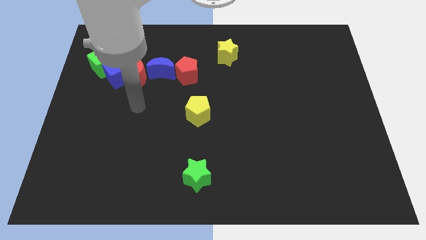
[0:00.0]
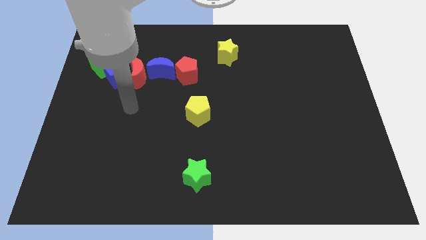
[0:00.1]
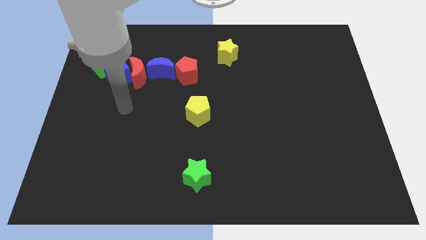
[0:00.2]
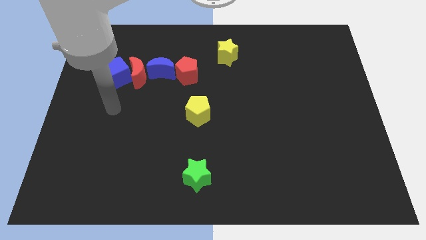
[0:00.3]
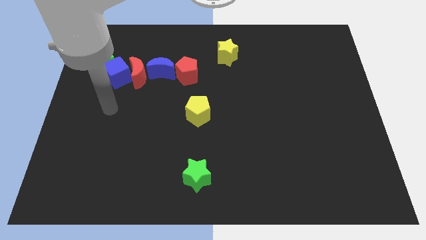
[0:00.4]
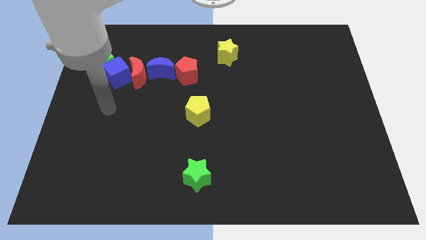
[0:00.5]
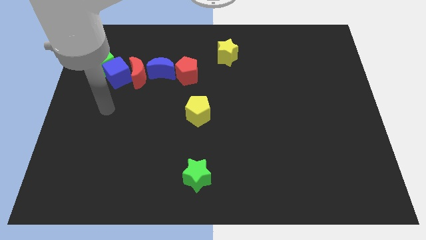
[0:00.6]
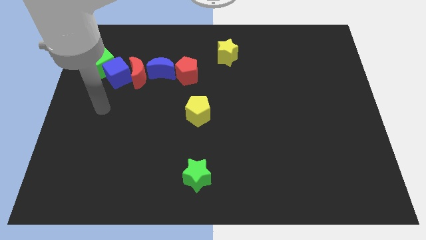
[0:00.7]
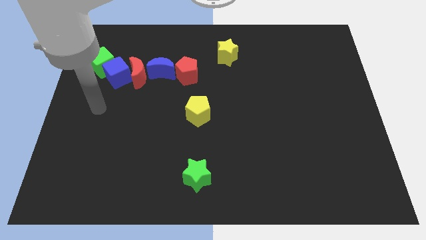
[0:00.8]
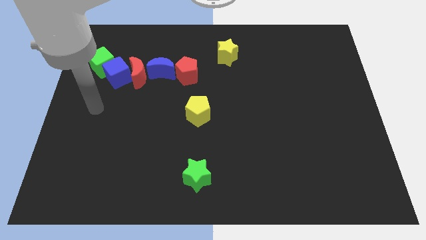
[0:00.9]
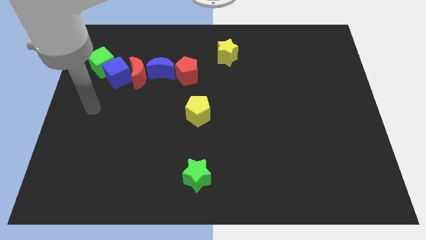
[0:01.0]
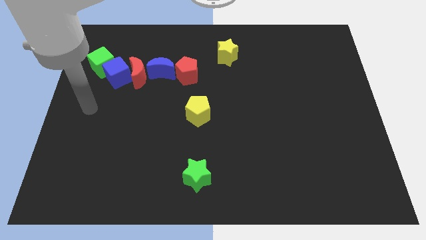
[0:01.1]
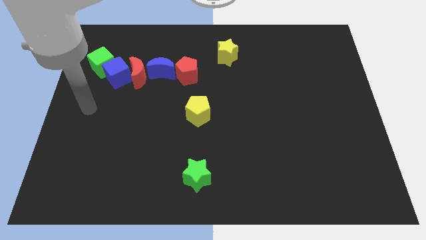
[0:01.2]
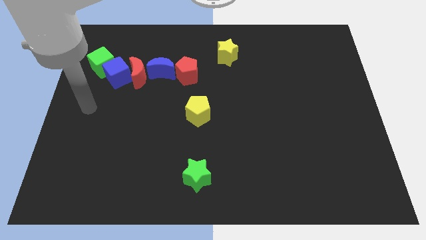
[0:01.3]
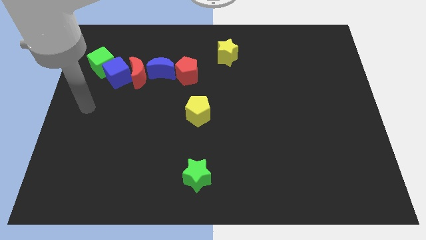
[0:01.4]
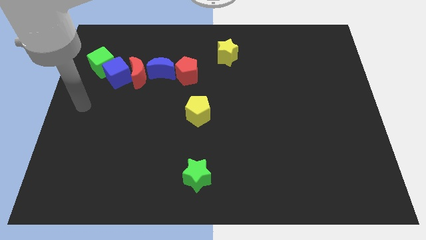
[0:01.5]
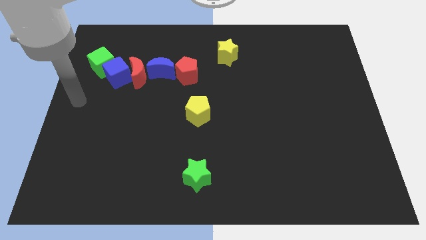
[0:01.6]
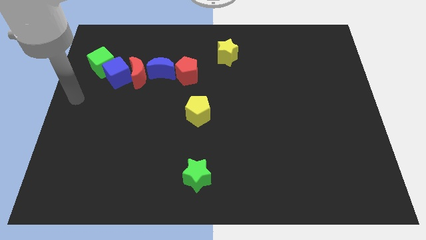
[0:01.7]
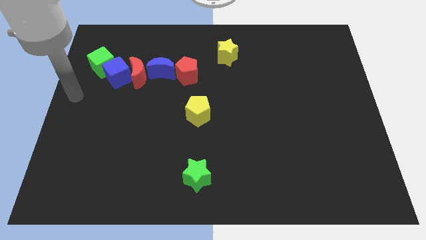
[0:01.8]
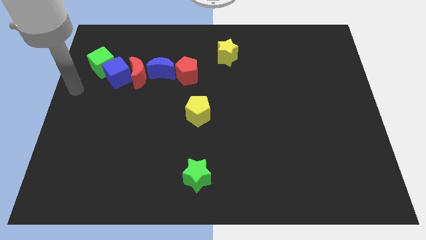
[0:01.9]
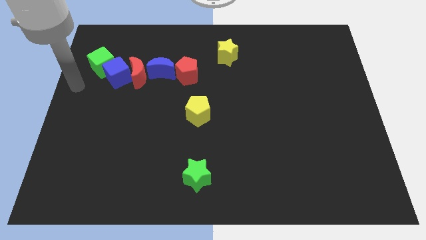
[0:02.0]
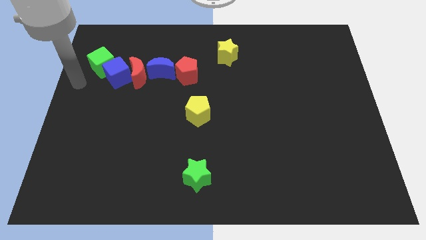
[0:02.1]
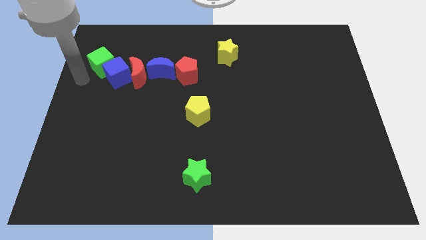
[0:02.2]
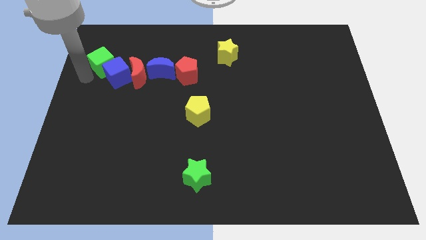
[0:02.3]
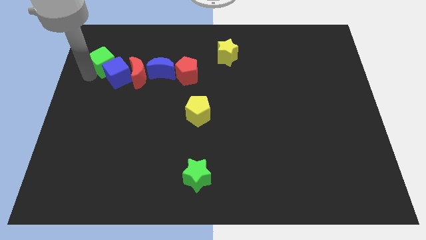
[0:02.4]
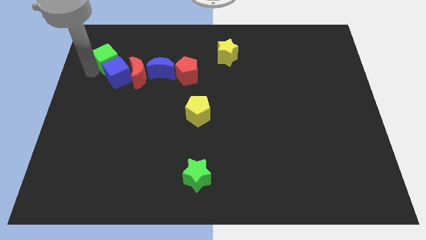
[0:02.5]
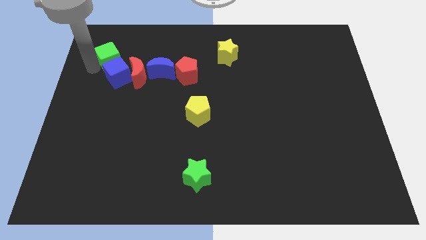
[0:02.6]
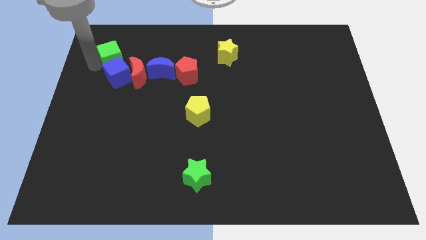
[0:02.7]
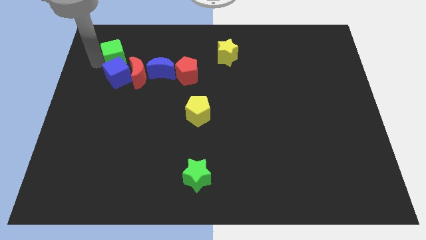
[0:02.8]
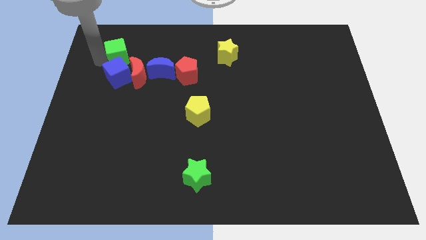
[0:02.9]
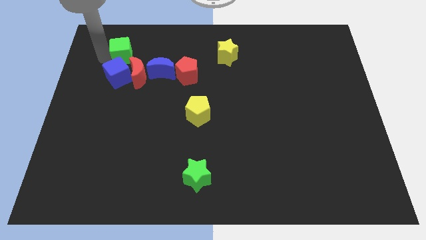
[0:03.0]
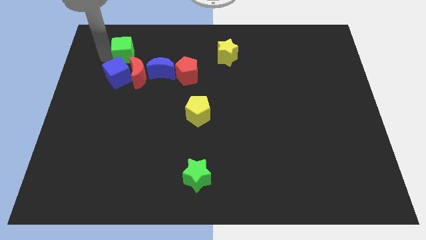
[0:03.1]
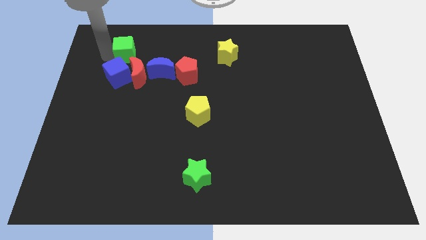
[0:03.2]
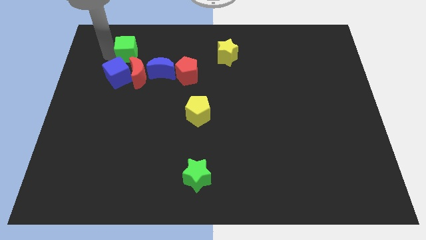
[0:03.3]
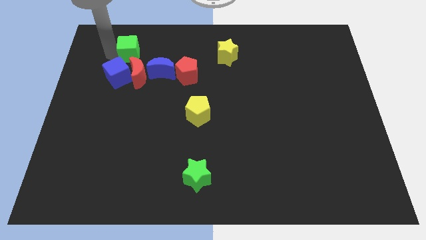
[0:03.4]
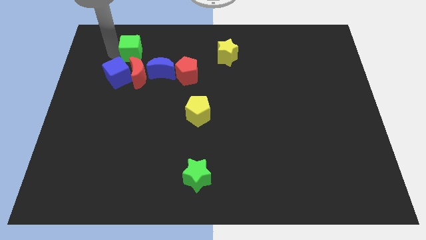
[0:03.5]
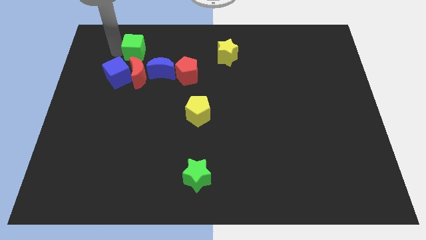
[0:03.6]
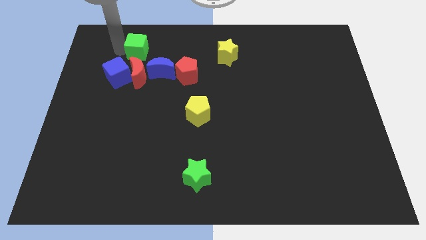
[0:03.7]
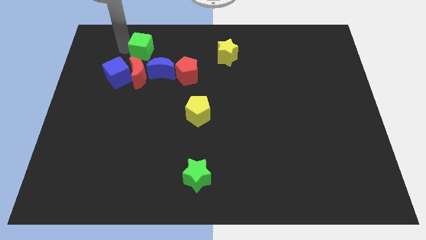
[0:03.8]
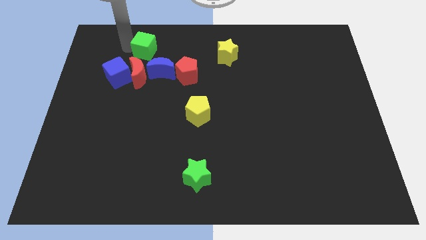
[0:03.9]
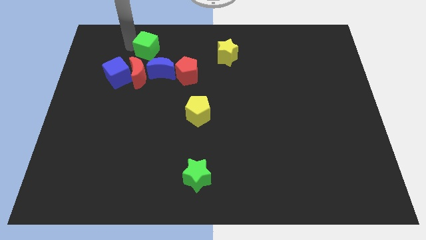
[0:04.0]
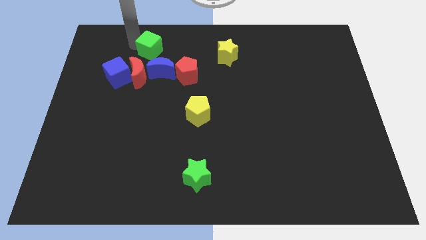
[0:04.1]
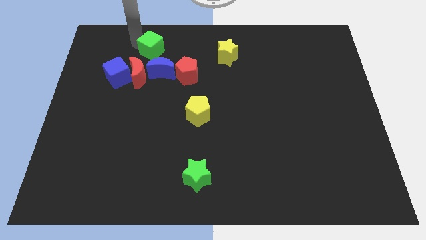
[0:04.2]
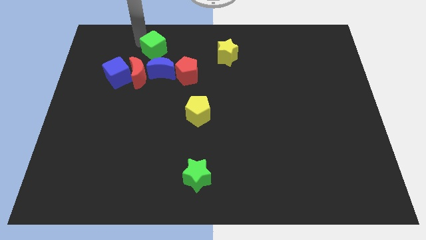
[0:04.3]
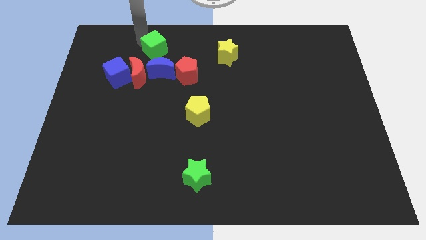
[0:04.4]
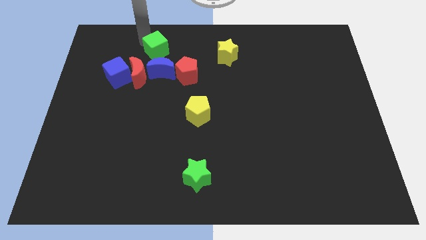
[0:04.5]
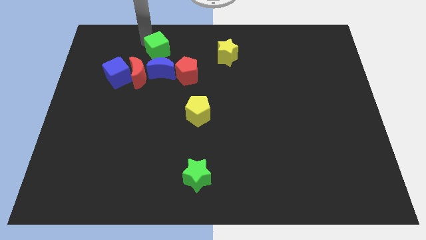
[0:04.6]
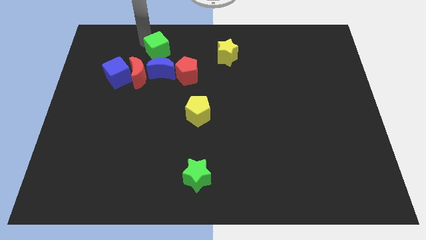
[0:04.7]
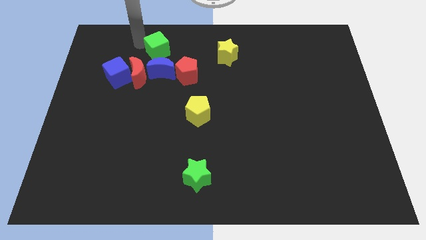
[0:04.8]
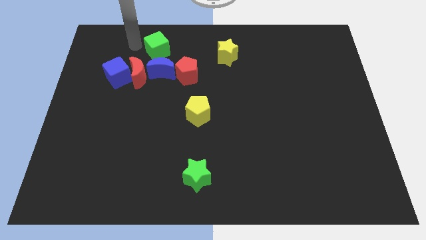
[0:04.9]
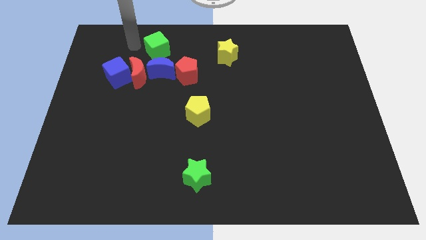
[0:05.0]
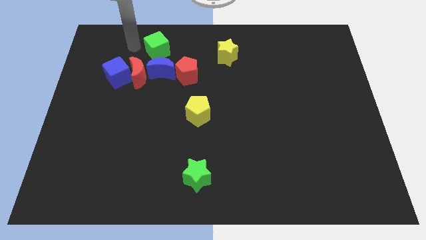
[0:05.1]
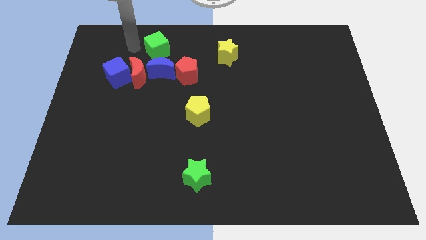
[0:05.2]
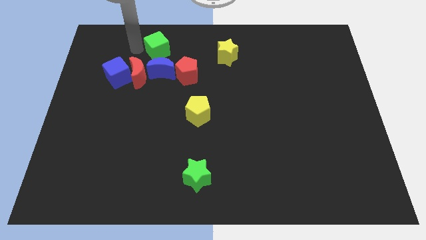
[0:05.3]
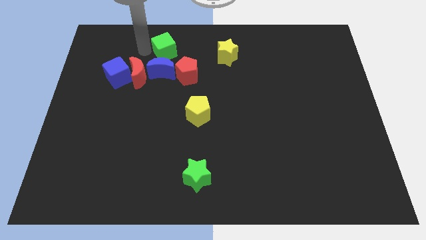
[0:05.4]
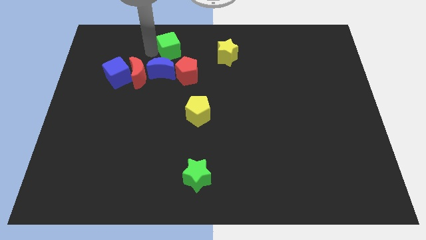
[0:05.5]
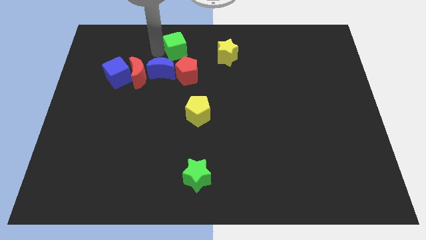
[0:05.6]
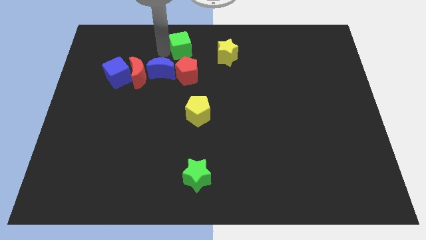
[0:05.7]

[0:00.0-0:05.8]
push the green cube to the top of the red pentagon

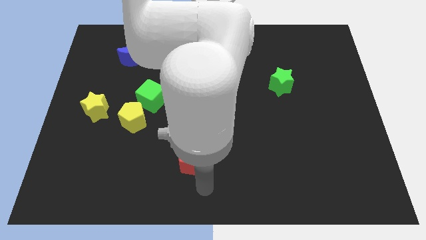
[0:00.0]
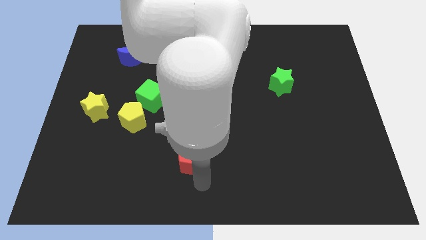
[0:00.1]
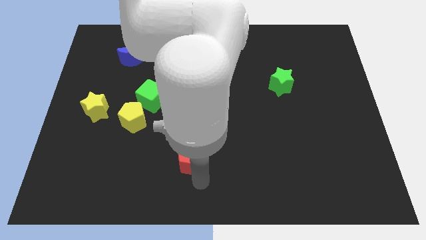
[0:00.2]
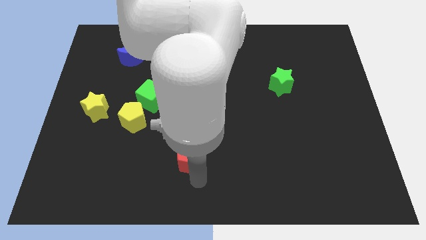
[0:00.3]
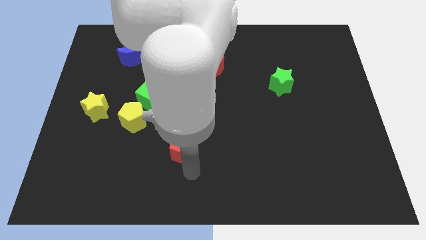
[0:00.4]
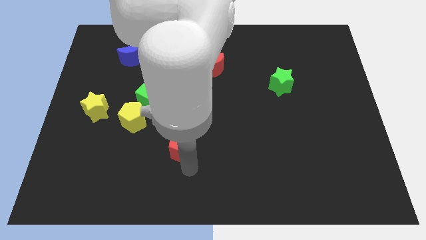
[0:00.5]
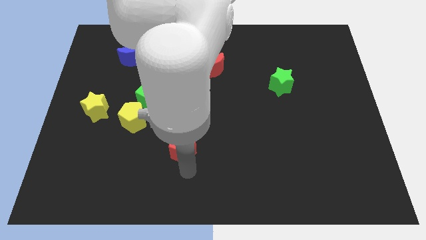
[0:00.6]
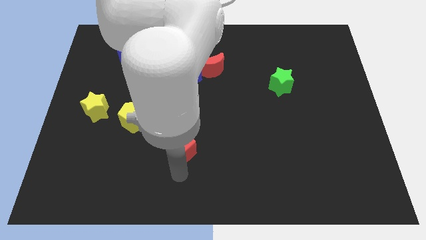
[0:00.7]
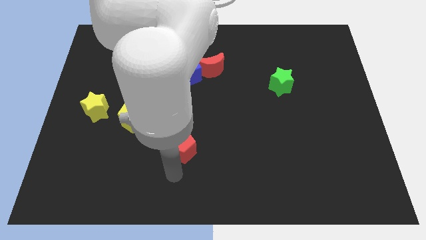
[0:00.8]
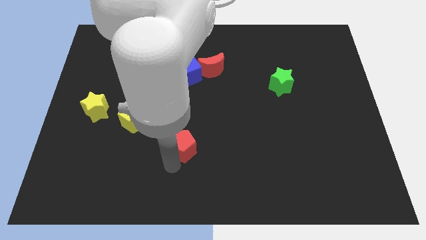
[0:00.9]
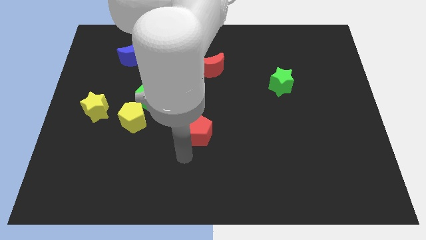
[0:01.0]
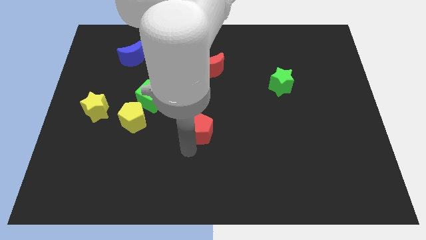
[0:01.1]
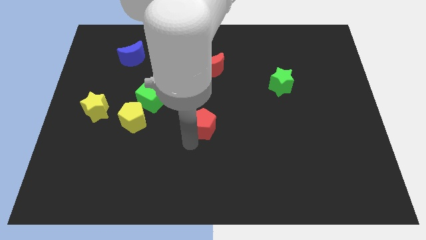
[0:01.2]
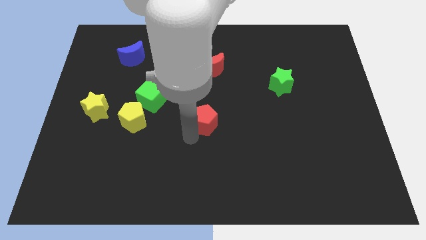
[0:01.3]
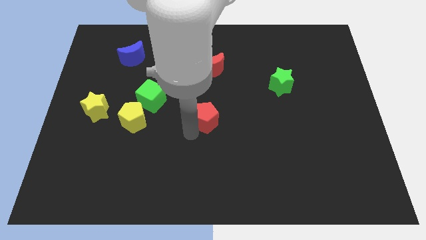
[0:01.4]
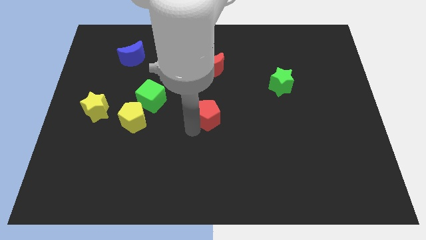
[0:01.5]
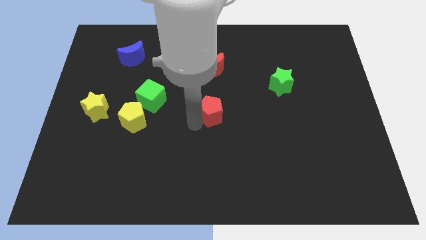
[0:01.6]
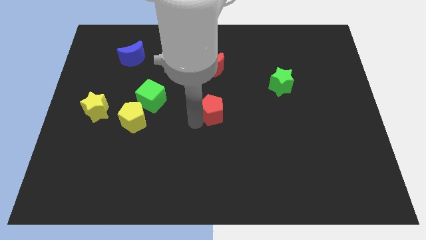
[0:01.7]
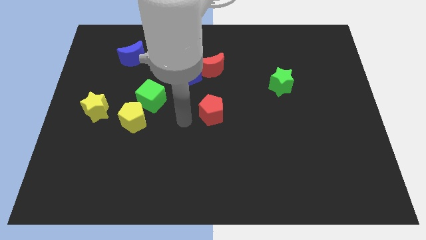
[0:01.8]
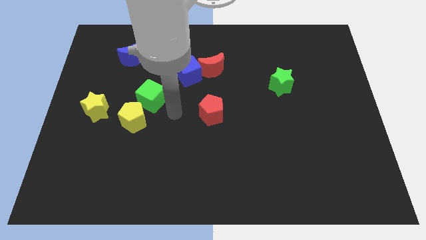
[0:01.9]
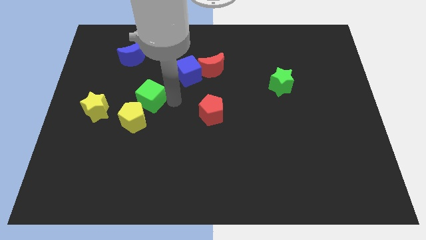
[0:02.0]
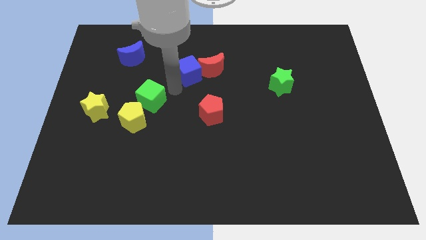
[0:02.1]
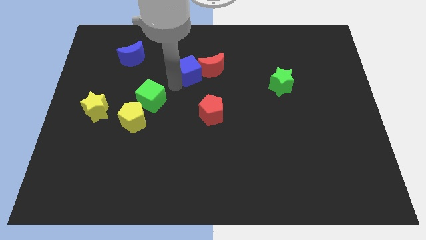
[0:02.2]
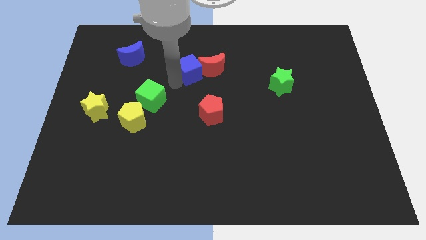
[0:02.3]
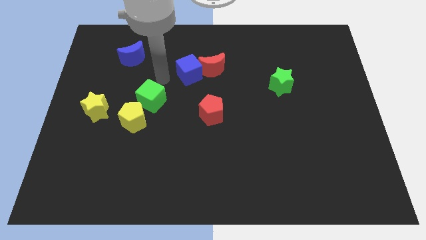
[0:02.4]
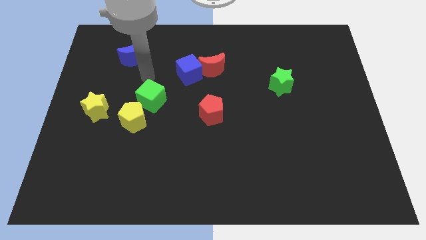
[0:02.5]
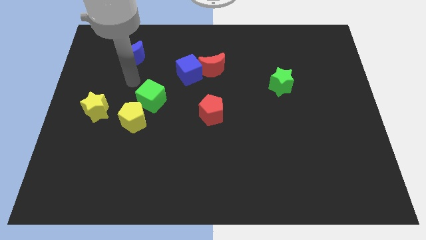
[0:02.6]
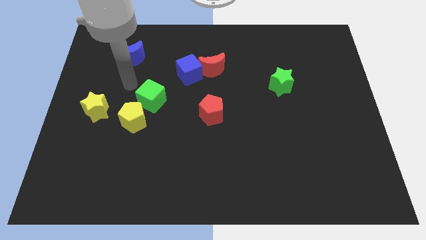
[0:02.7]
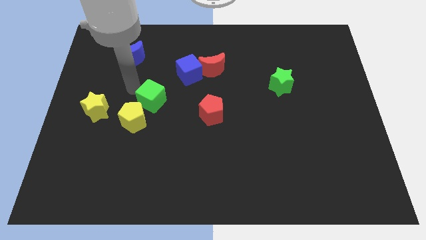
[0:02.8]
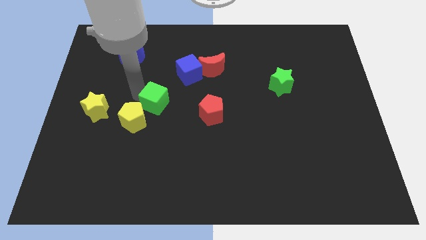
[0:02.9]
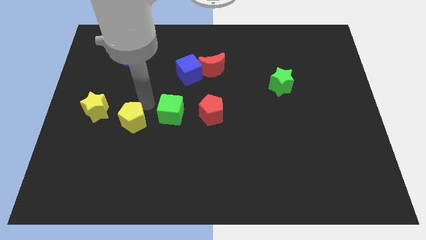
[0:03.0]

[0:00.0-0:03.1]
place the red pentagon underneath the blue cube
